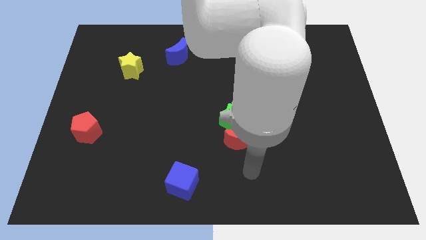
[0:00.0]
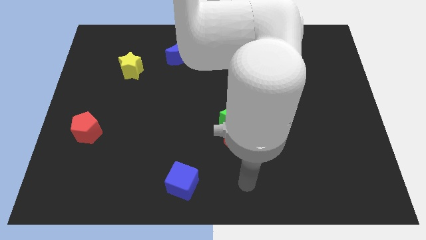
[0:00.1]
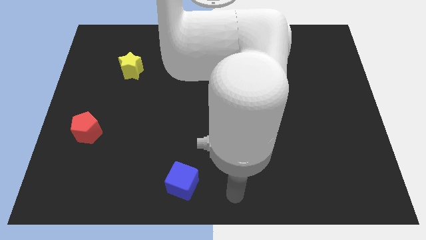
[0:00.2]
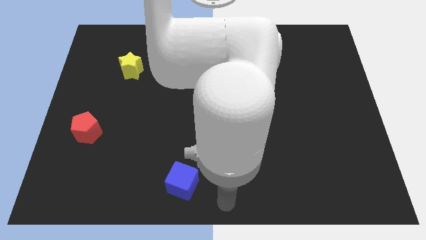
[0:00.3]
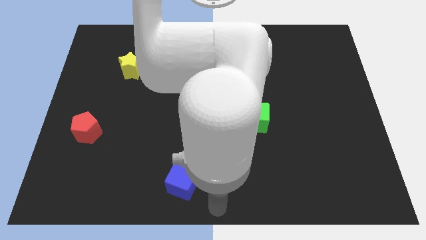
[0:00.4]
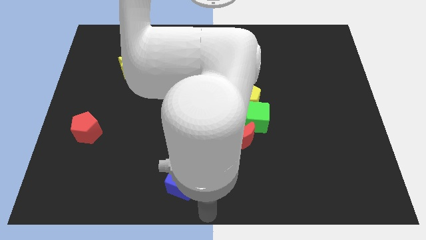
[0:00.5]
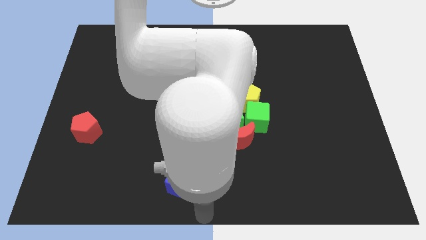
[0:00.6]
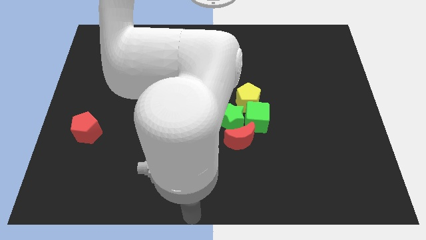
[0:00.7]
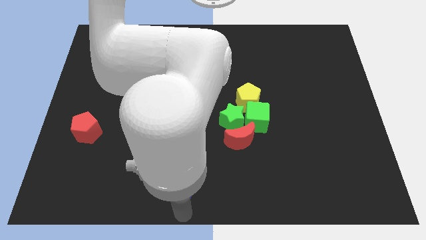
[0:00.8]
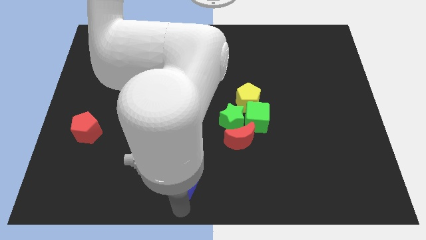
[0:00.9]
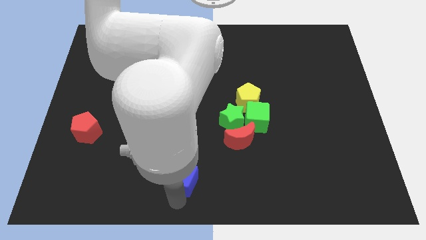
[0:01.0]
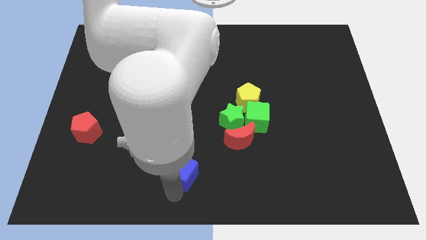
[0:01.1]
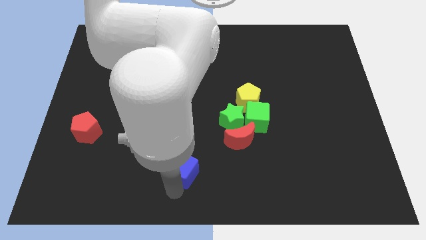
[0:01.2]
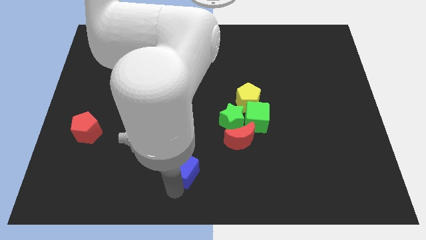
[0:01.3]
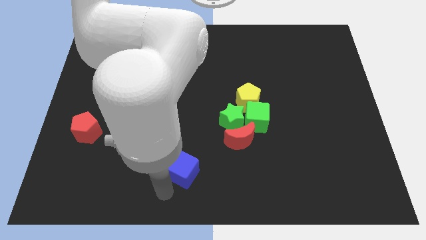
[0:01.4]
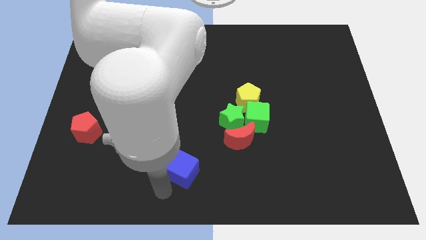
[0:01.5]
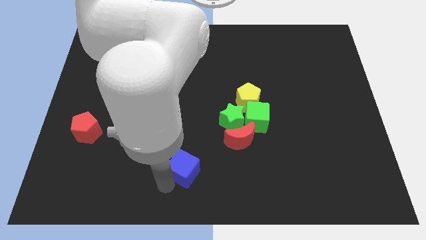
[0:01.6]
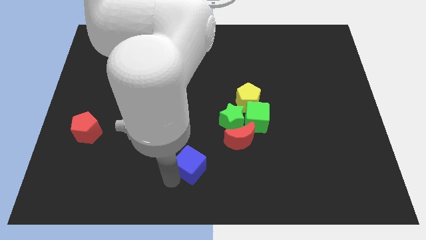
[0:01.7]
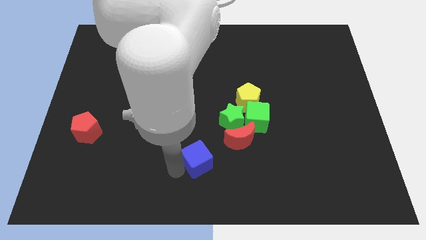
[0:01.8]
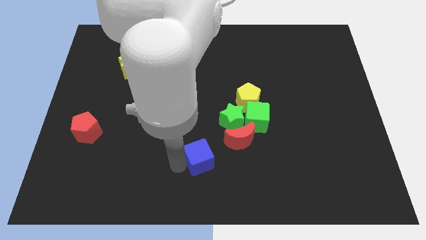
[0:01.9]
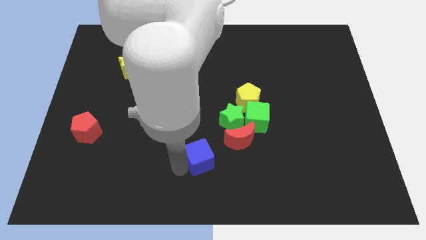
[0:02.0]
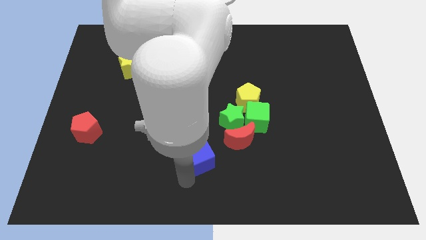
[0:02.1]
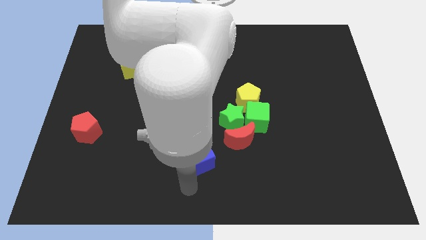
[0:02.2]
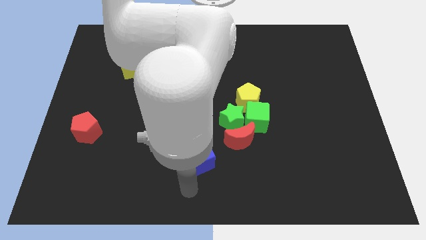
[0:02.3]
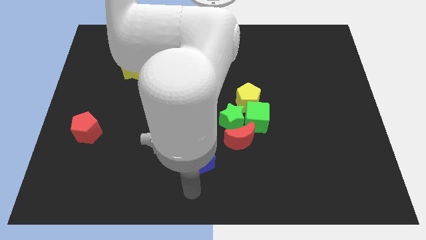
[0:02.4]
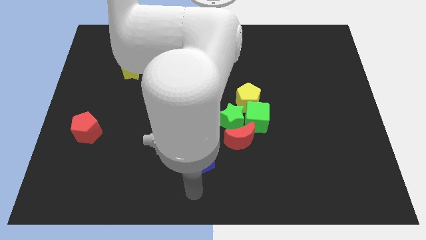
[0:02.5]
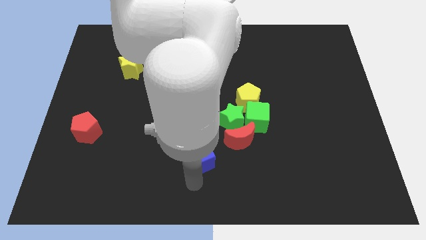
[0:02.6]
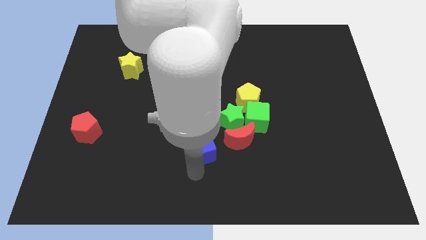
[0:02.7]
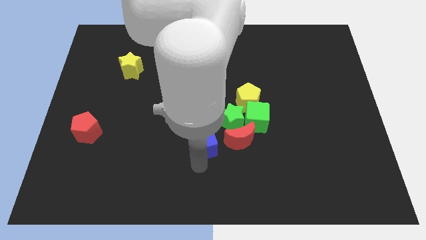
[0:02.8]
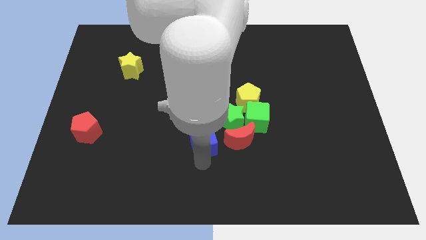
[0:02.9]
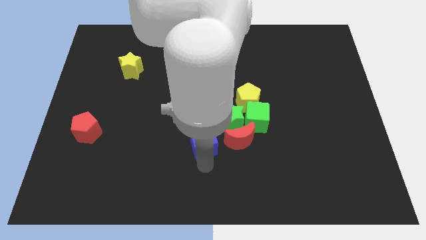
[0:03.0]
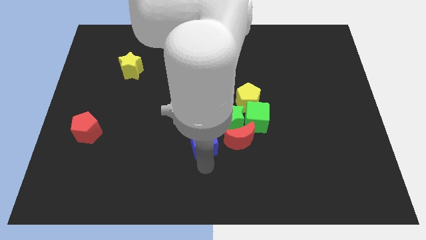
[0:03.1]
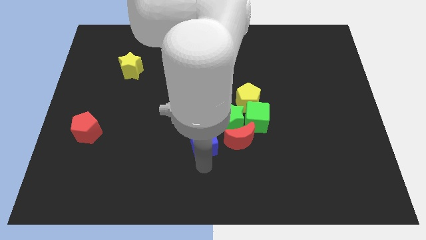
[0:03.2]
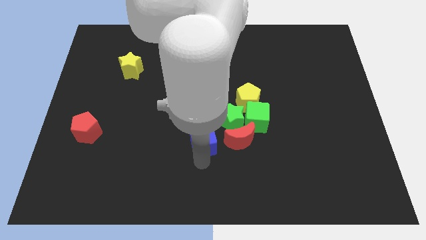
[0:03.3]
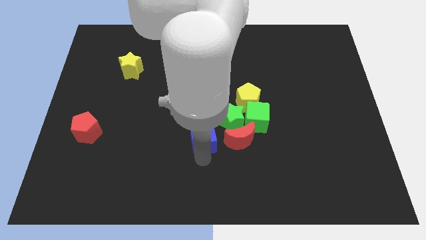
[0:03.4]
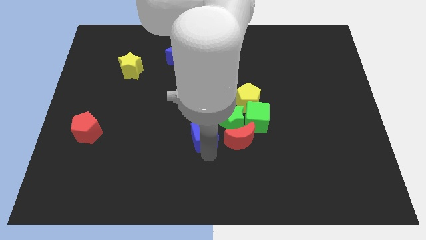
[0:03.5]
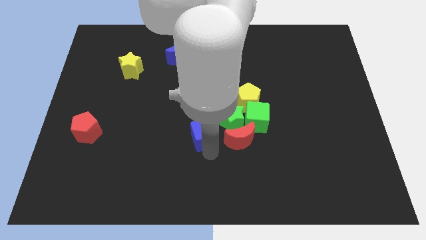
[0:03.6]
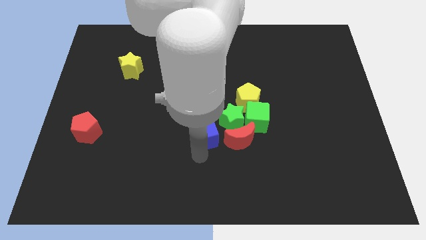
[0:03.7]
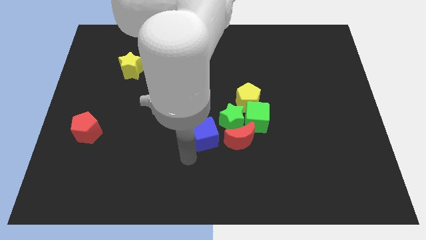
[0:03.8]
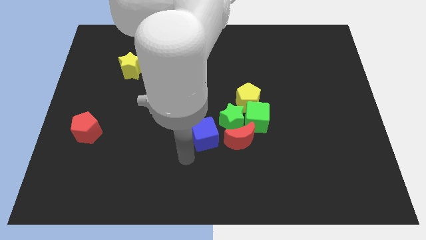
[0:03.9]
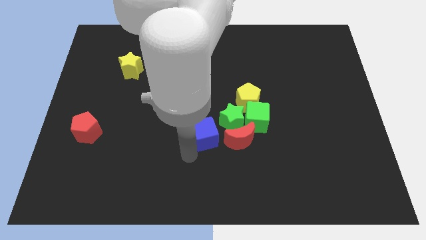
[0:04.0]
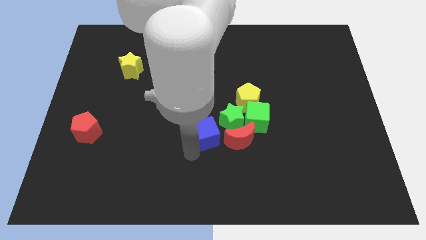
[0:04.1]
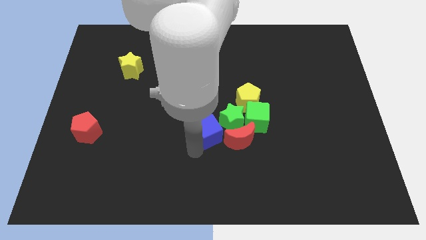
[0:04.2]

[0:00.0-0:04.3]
place the blue cube to the right of red crescent

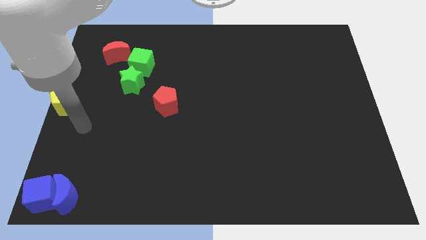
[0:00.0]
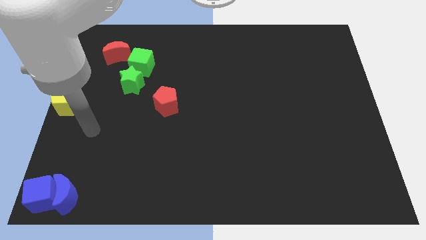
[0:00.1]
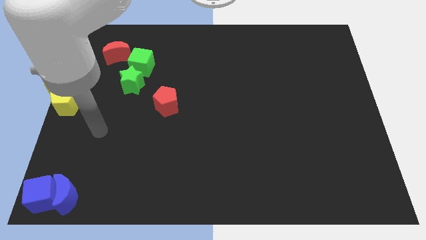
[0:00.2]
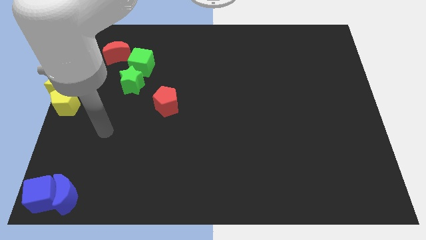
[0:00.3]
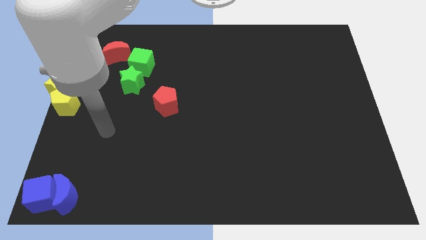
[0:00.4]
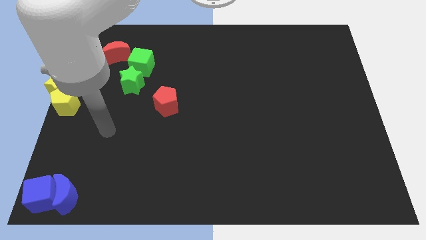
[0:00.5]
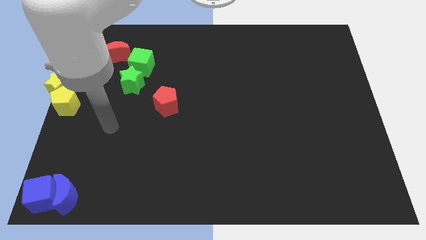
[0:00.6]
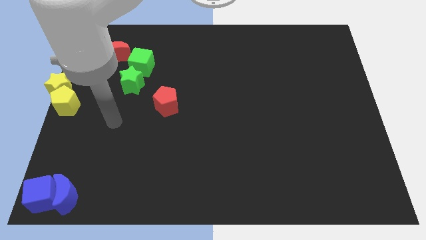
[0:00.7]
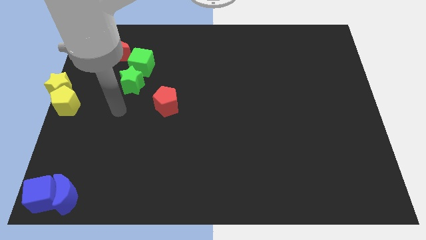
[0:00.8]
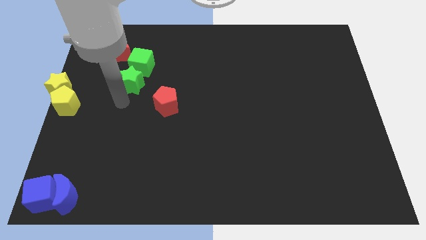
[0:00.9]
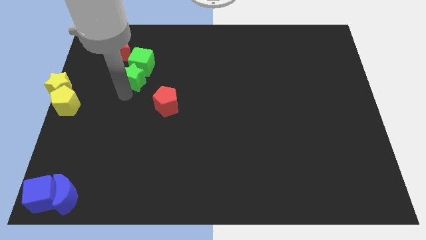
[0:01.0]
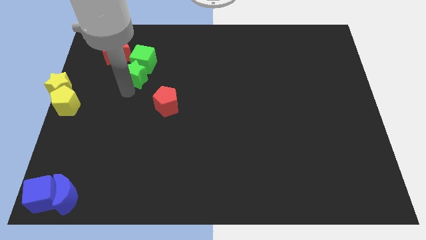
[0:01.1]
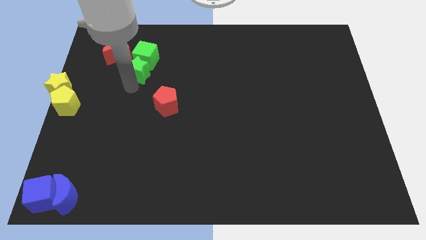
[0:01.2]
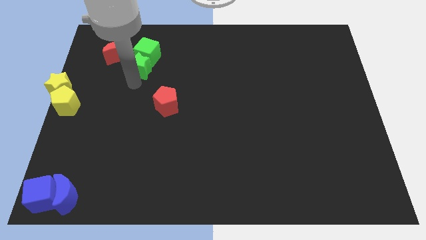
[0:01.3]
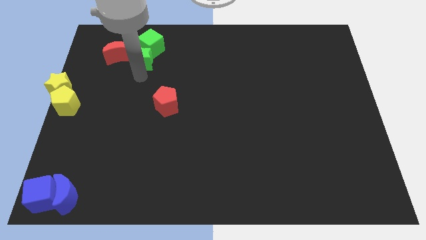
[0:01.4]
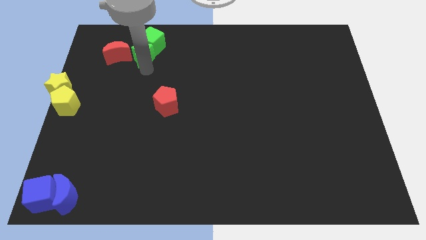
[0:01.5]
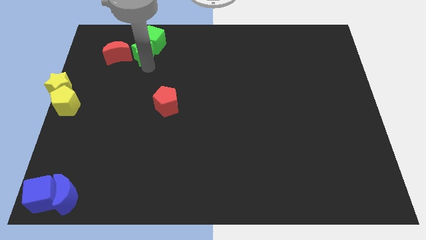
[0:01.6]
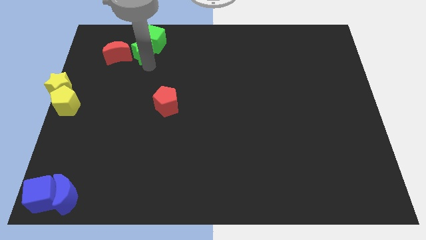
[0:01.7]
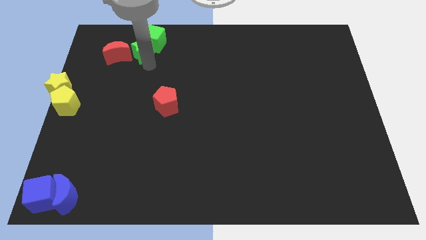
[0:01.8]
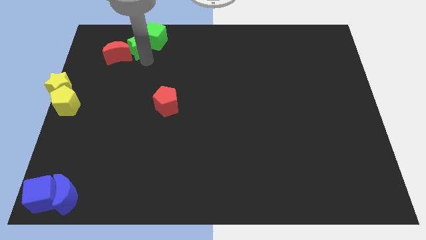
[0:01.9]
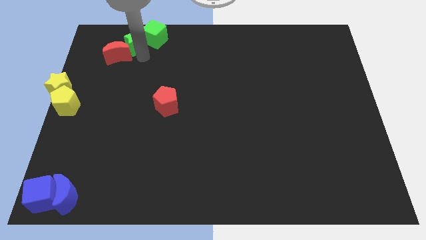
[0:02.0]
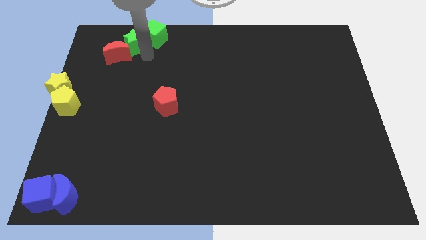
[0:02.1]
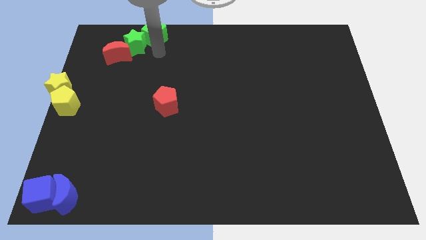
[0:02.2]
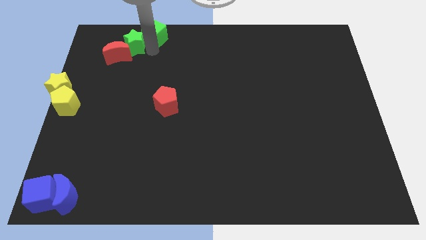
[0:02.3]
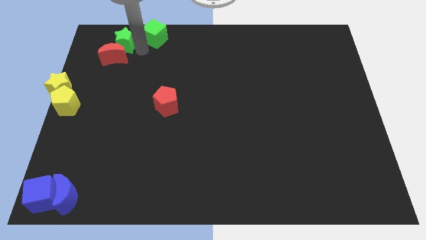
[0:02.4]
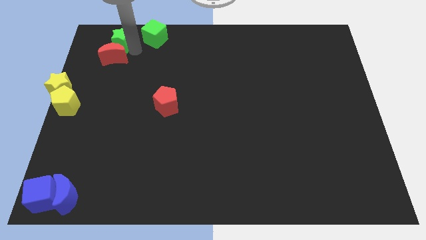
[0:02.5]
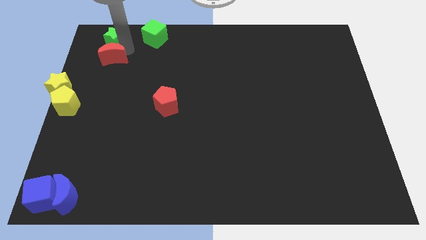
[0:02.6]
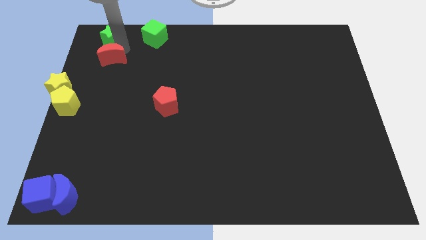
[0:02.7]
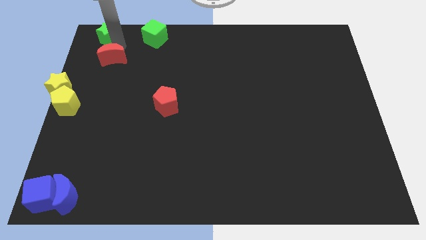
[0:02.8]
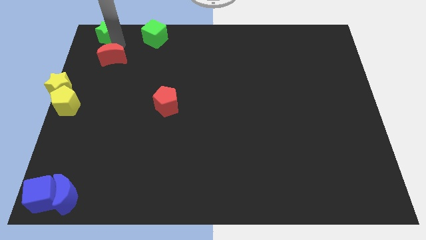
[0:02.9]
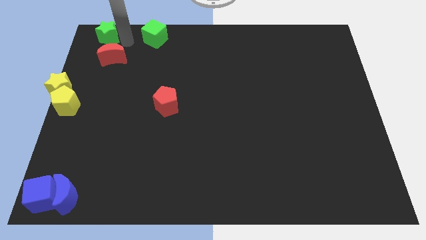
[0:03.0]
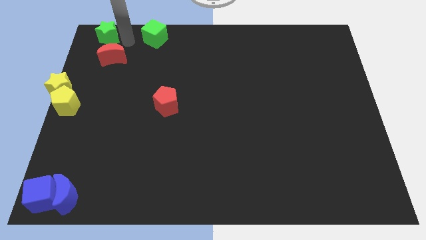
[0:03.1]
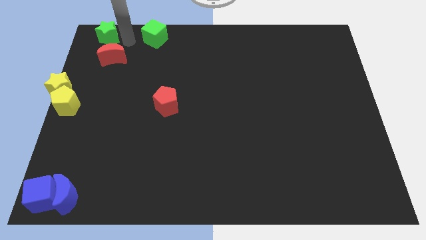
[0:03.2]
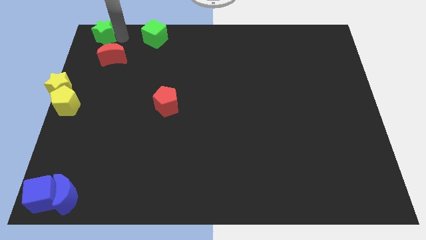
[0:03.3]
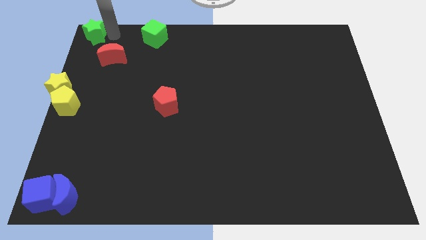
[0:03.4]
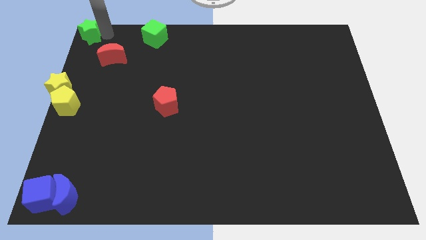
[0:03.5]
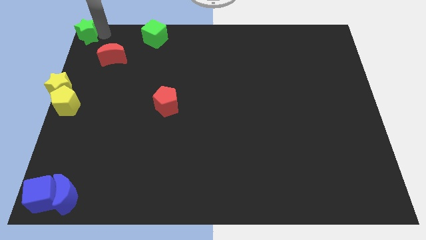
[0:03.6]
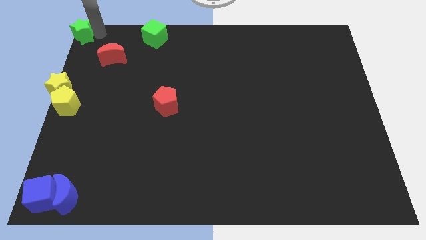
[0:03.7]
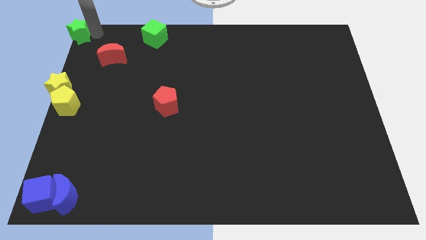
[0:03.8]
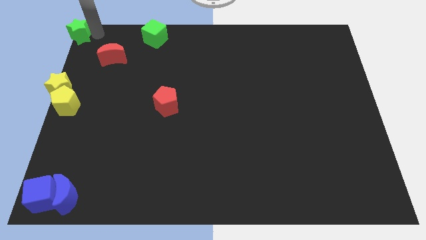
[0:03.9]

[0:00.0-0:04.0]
slide the green star to the top left side of the board

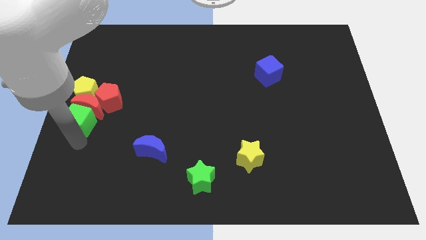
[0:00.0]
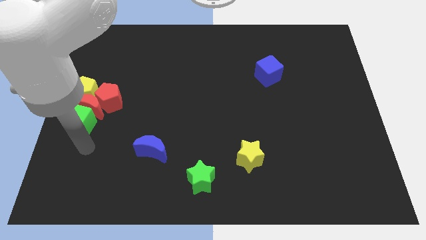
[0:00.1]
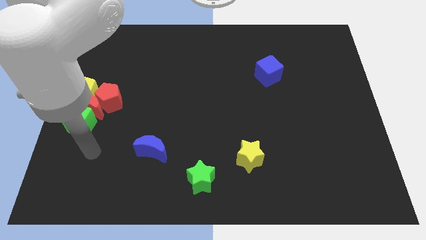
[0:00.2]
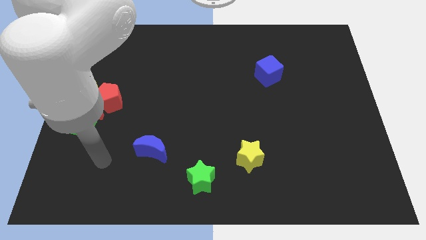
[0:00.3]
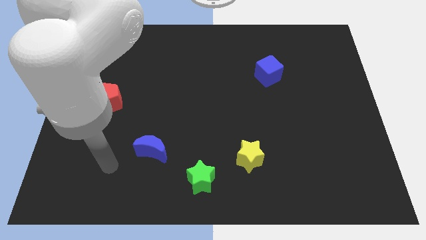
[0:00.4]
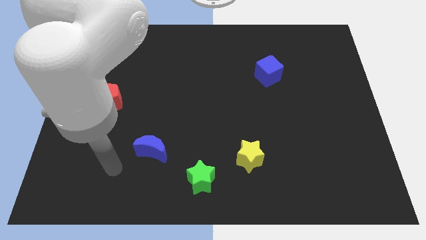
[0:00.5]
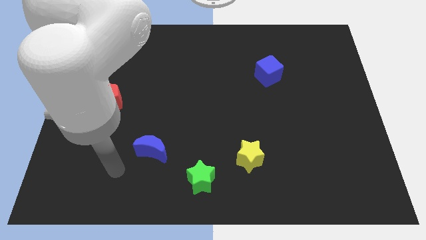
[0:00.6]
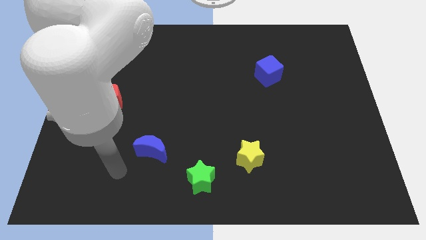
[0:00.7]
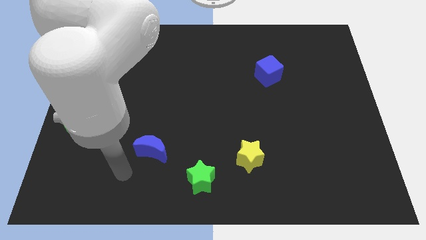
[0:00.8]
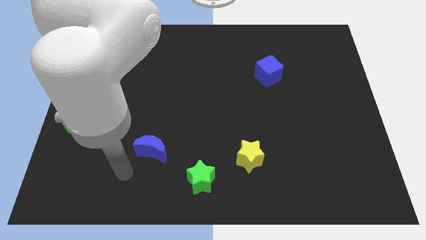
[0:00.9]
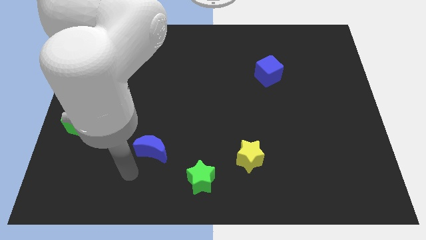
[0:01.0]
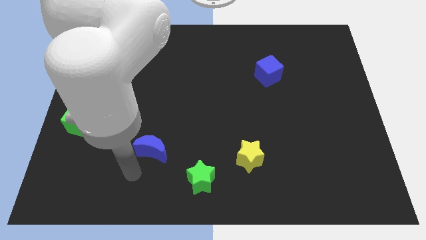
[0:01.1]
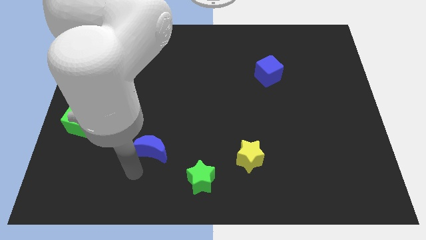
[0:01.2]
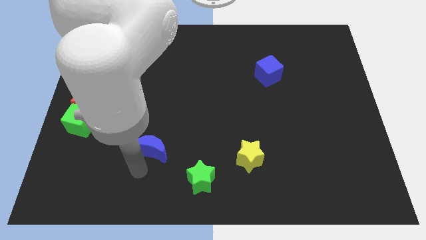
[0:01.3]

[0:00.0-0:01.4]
move your arm below the blue crescent
